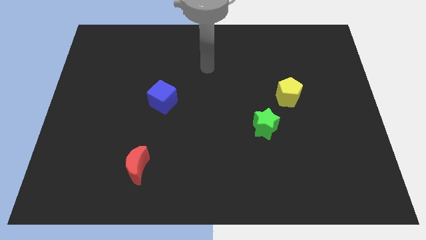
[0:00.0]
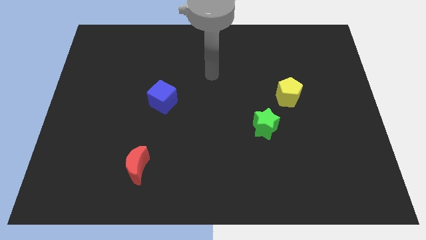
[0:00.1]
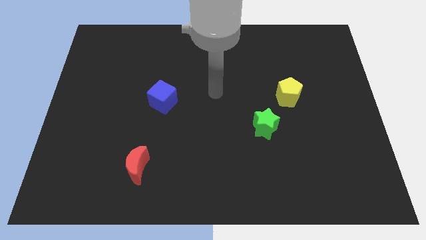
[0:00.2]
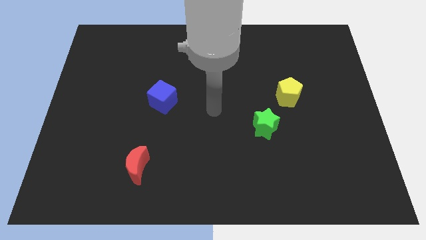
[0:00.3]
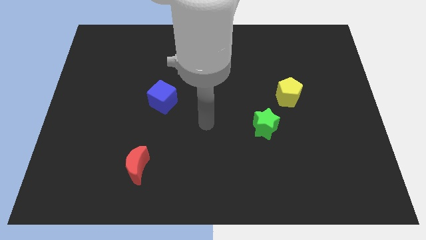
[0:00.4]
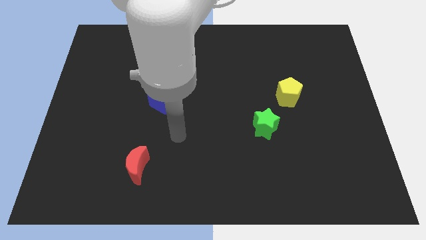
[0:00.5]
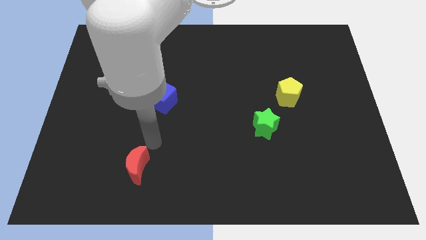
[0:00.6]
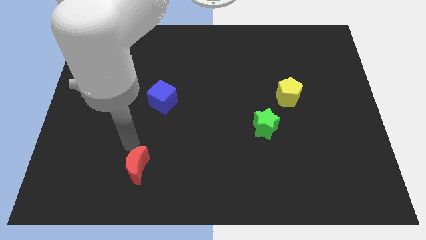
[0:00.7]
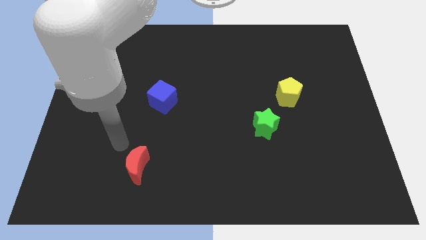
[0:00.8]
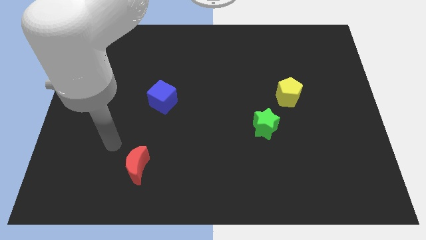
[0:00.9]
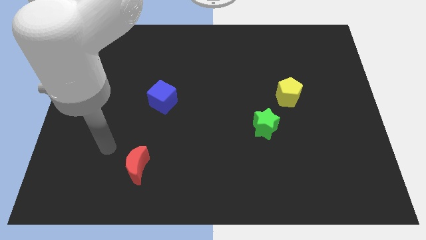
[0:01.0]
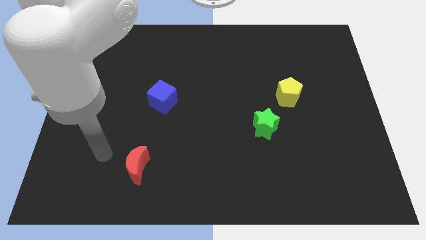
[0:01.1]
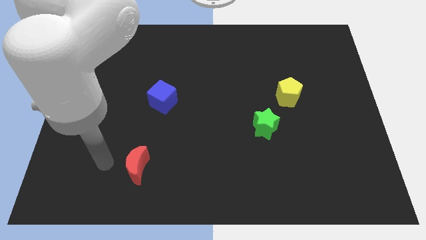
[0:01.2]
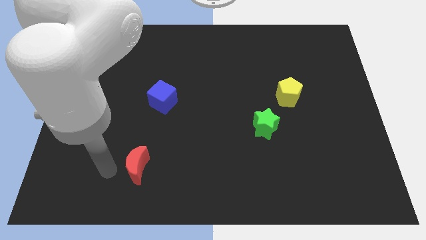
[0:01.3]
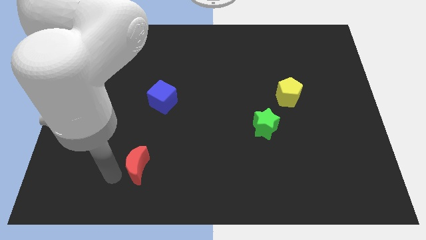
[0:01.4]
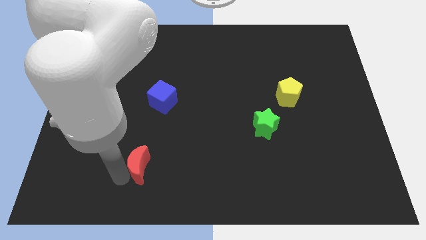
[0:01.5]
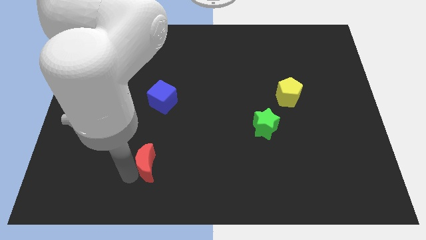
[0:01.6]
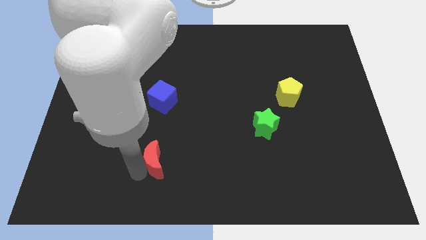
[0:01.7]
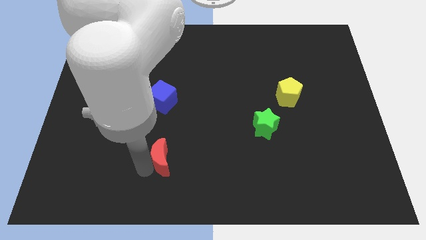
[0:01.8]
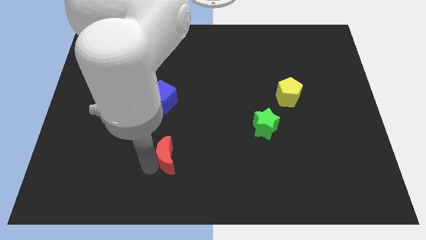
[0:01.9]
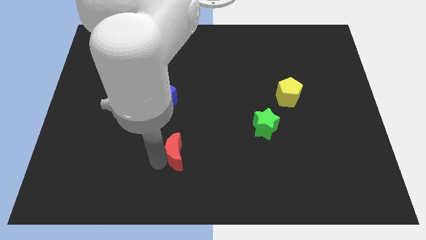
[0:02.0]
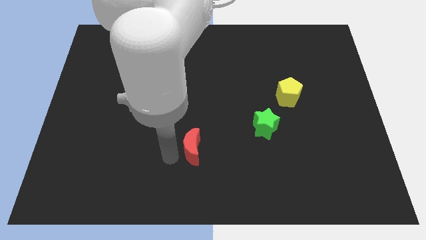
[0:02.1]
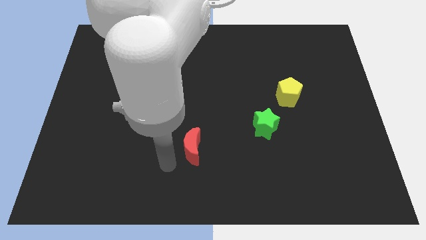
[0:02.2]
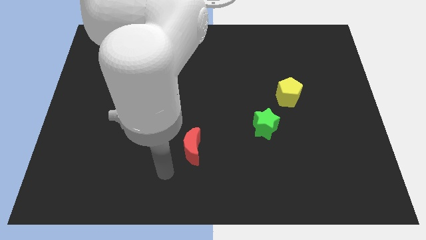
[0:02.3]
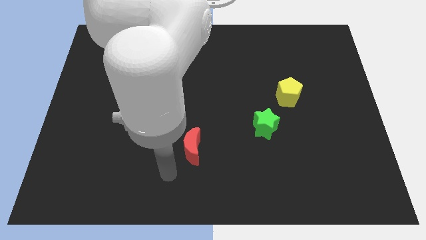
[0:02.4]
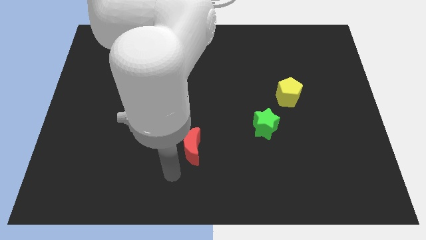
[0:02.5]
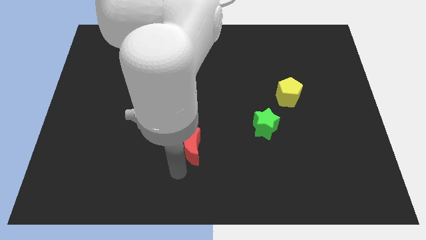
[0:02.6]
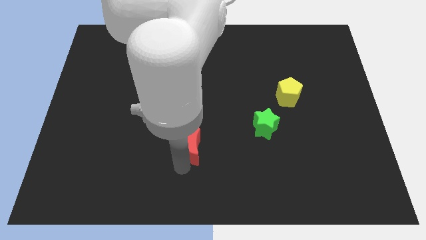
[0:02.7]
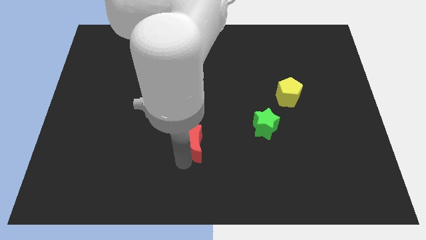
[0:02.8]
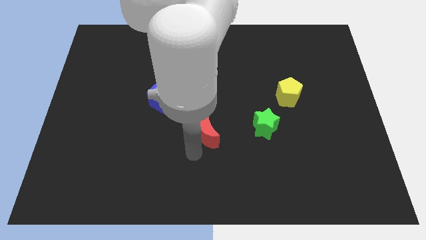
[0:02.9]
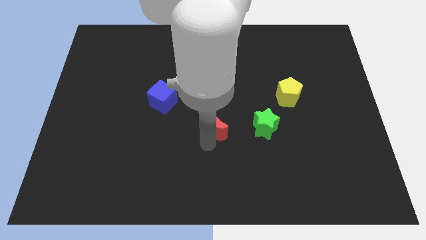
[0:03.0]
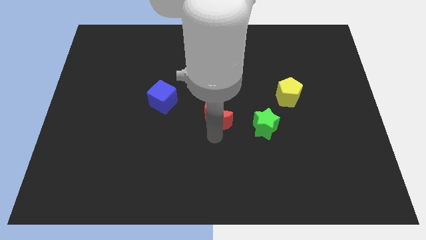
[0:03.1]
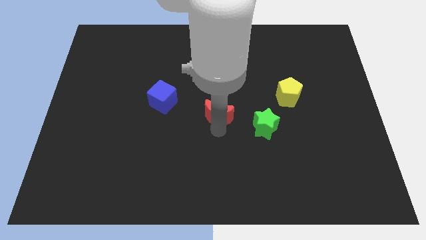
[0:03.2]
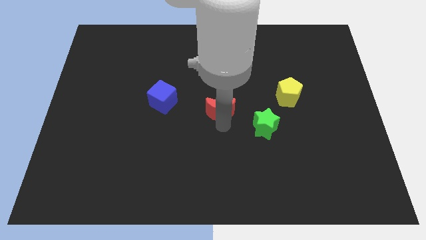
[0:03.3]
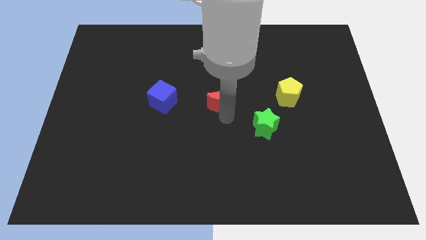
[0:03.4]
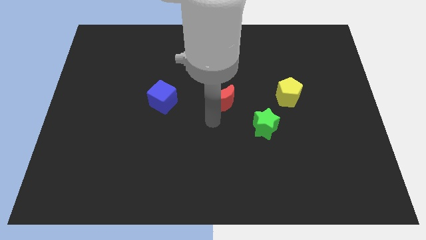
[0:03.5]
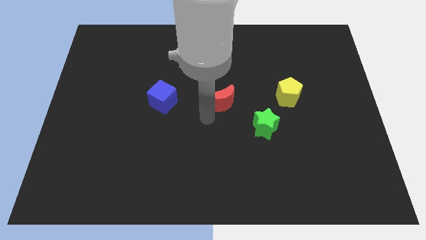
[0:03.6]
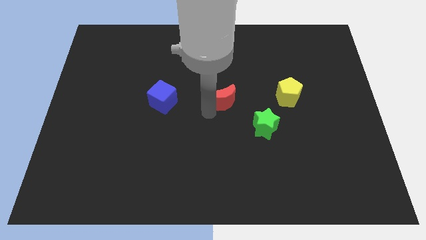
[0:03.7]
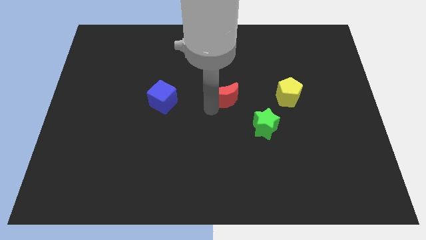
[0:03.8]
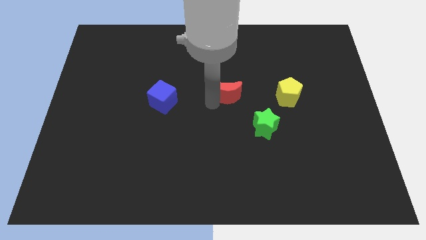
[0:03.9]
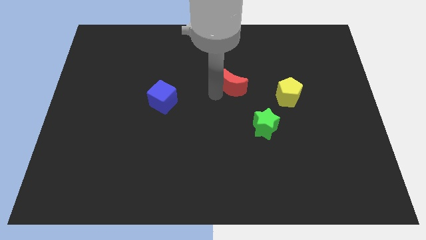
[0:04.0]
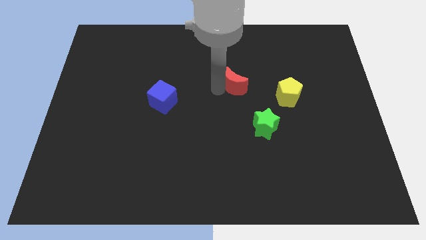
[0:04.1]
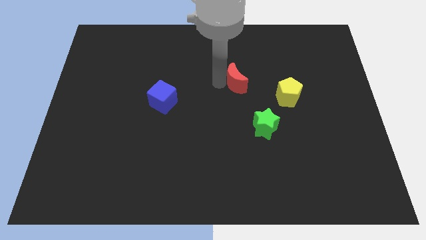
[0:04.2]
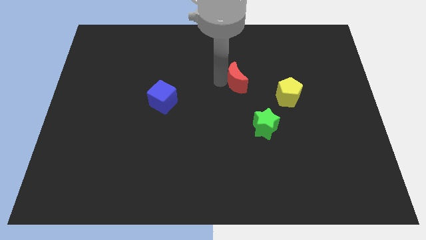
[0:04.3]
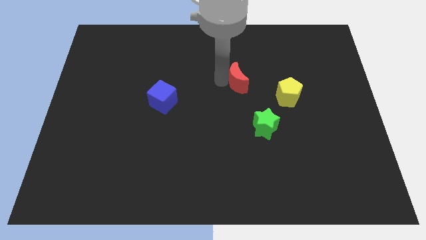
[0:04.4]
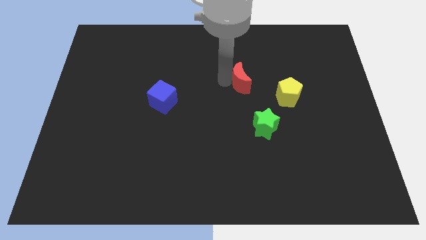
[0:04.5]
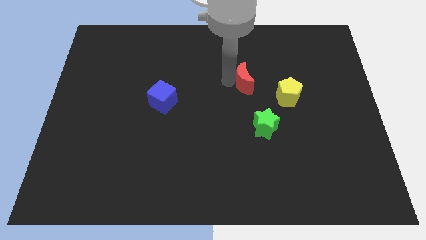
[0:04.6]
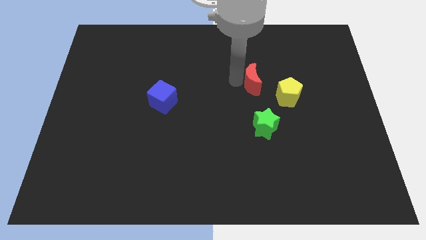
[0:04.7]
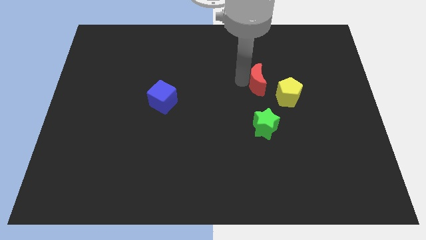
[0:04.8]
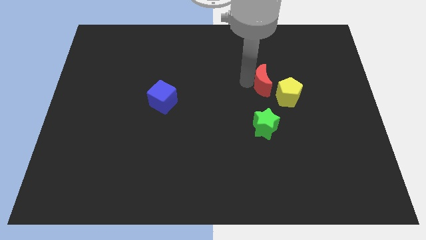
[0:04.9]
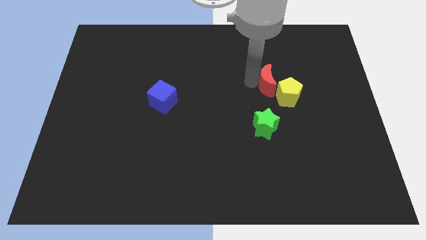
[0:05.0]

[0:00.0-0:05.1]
put the red moon towards the yellow pentagon

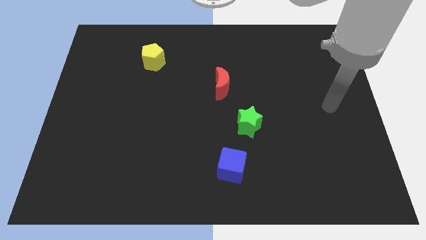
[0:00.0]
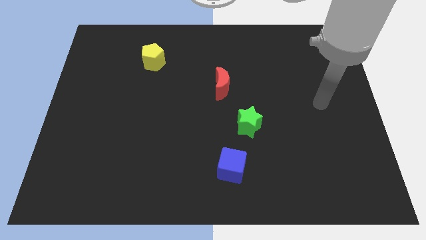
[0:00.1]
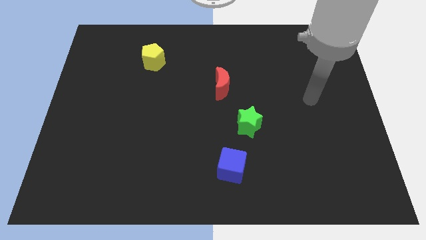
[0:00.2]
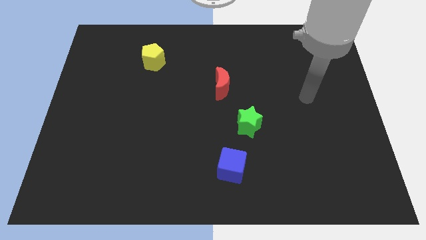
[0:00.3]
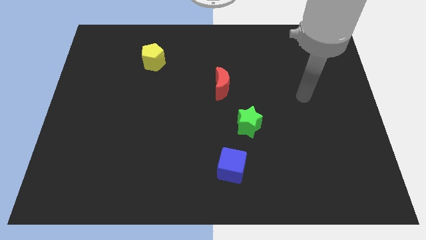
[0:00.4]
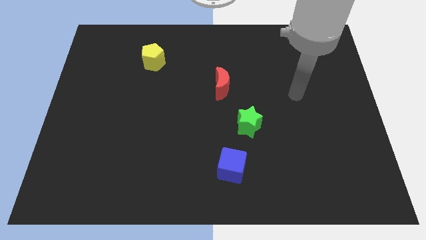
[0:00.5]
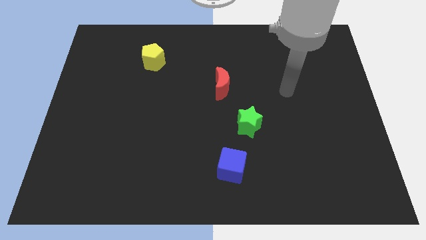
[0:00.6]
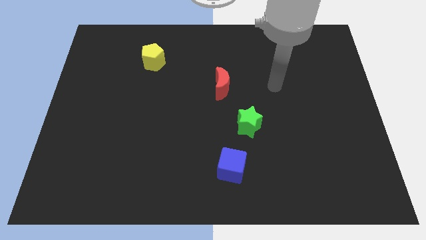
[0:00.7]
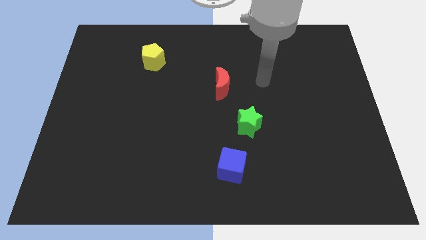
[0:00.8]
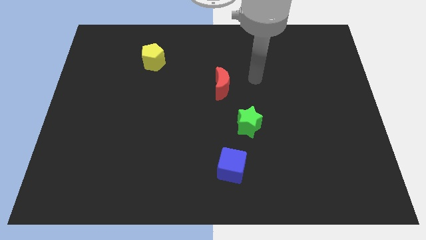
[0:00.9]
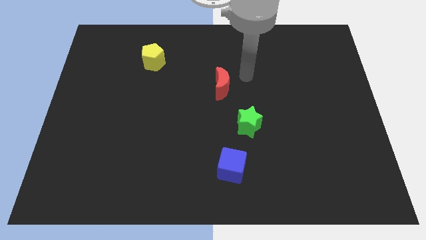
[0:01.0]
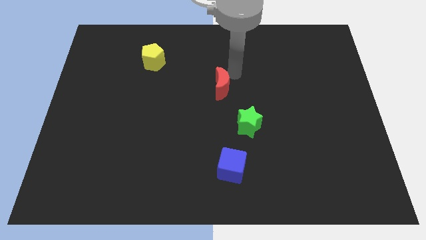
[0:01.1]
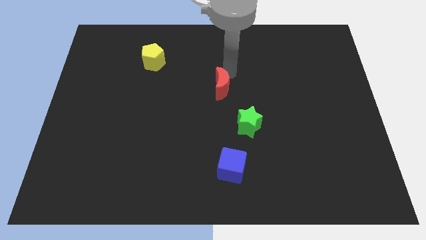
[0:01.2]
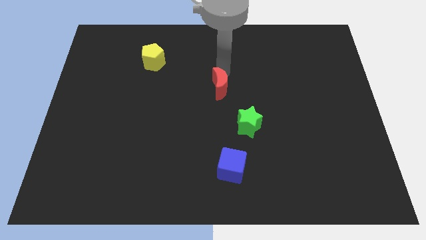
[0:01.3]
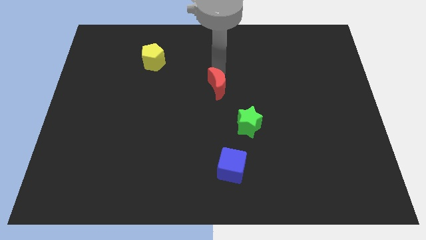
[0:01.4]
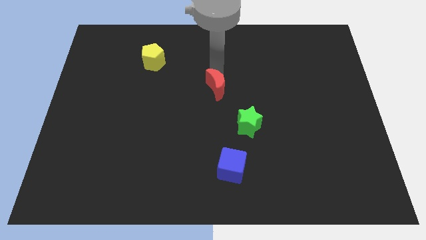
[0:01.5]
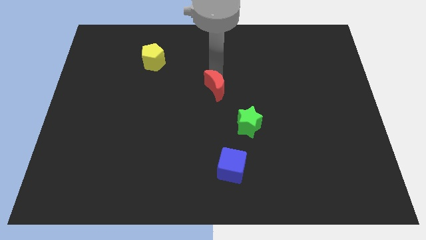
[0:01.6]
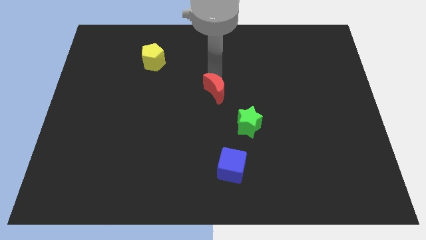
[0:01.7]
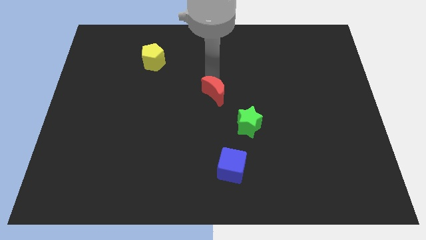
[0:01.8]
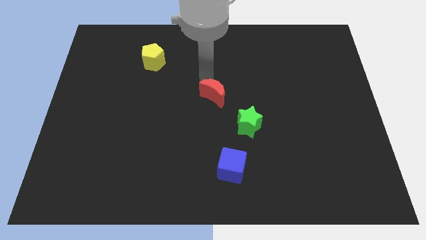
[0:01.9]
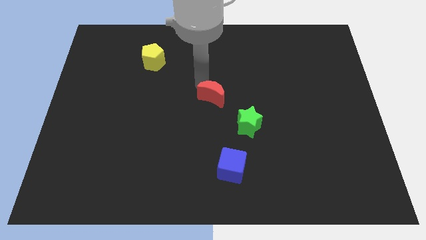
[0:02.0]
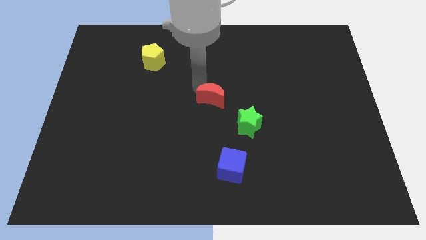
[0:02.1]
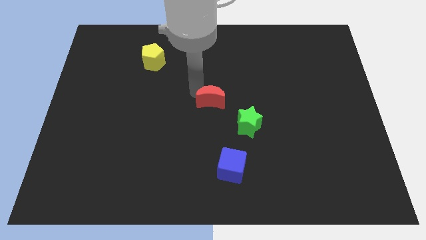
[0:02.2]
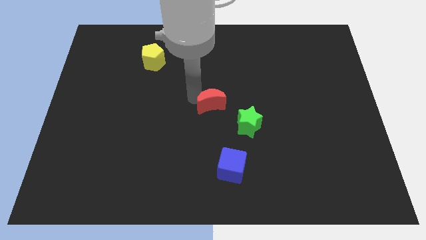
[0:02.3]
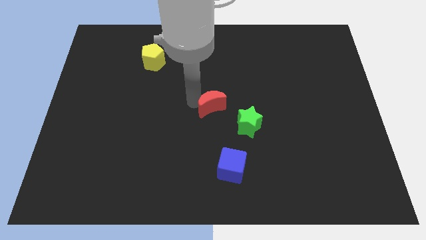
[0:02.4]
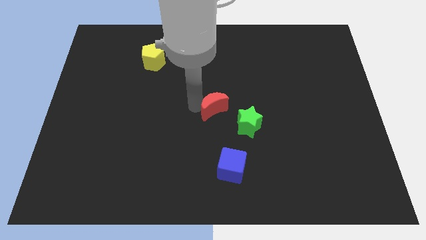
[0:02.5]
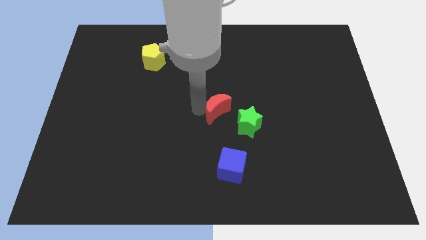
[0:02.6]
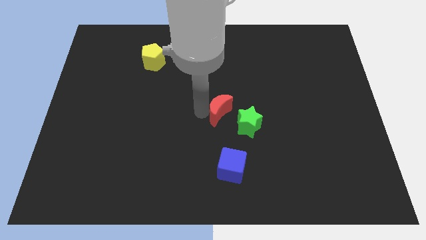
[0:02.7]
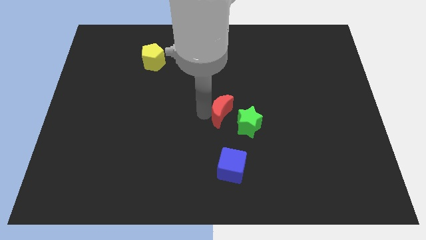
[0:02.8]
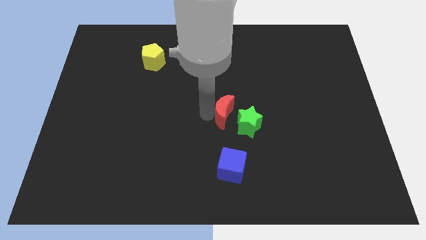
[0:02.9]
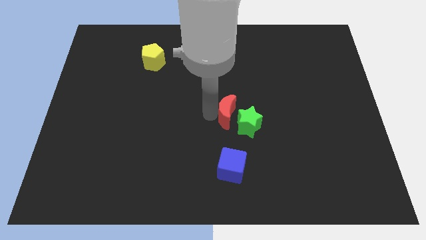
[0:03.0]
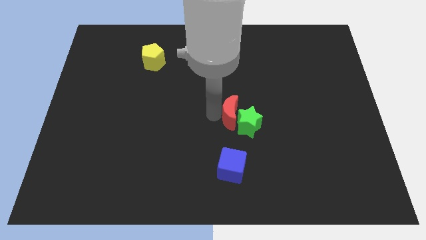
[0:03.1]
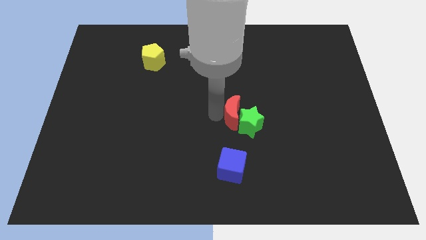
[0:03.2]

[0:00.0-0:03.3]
put the moon next to the green star

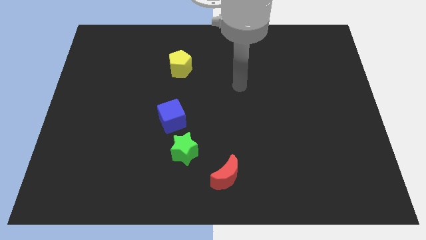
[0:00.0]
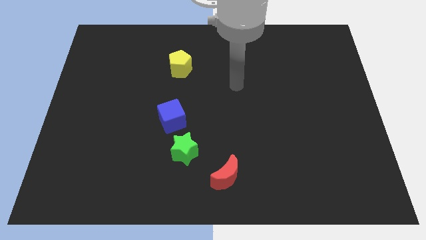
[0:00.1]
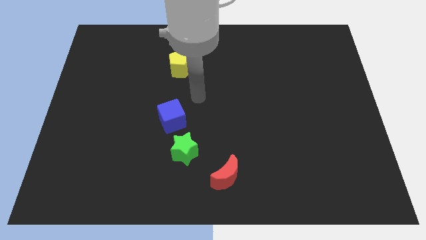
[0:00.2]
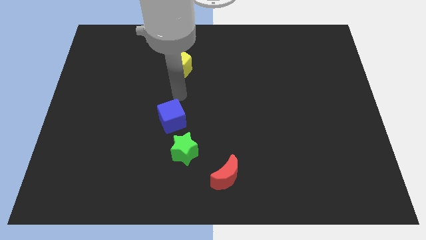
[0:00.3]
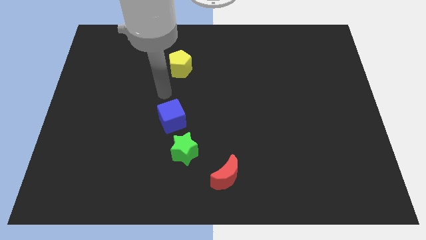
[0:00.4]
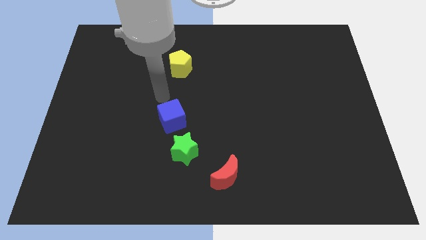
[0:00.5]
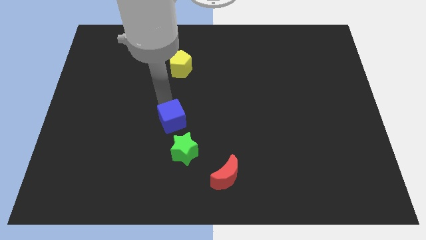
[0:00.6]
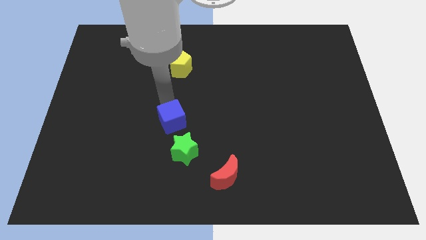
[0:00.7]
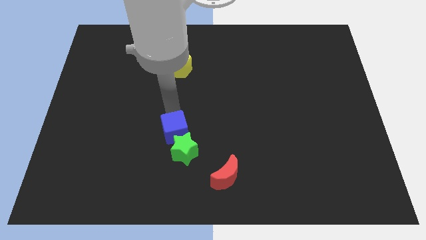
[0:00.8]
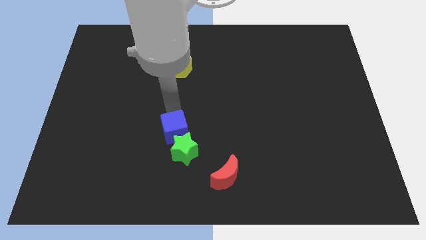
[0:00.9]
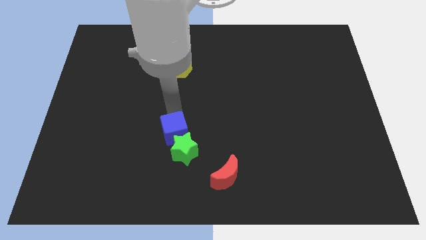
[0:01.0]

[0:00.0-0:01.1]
put the blue cube close to the green star
